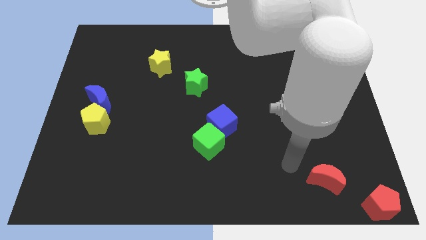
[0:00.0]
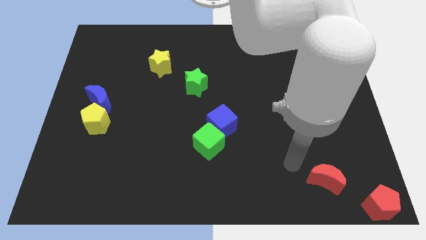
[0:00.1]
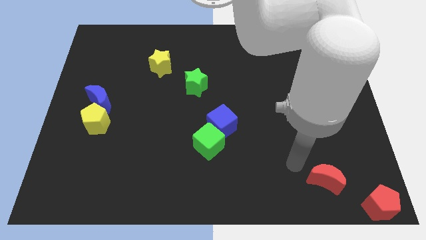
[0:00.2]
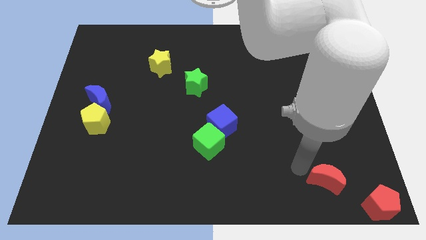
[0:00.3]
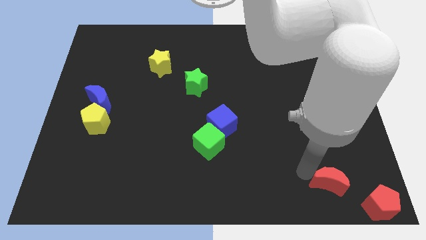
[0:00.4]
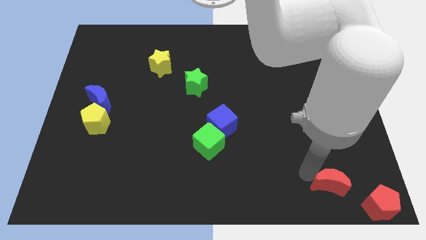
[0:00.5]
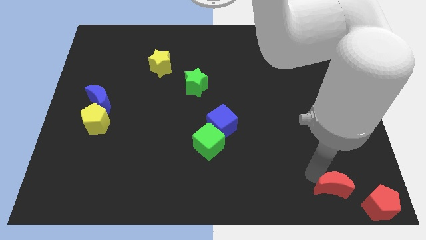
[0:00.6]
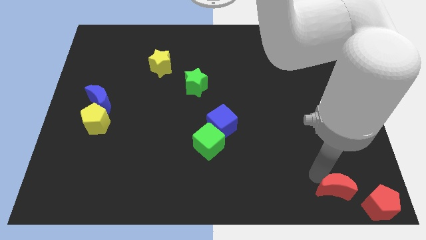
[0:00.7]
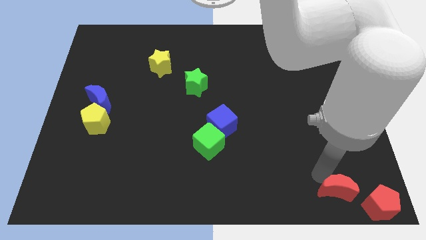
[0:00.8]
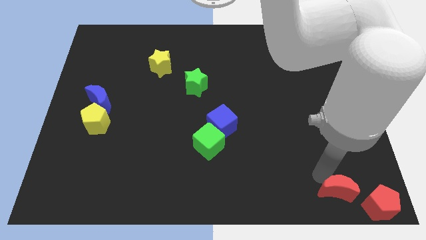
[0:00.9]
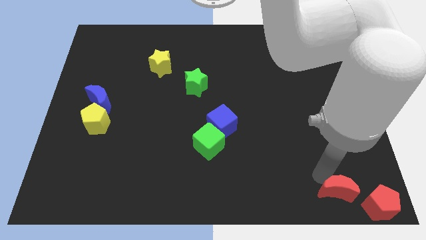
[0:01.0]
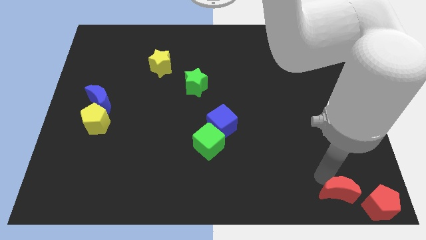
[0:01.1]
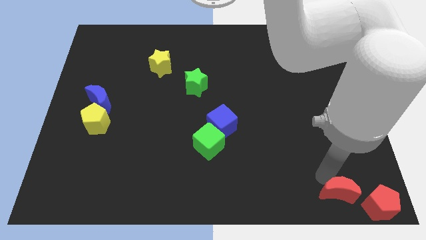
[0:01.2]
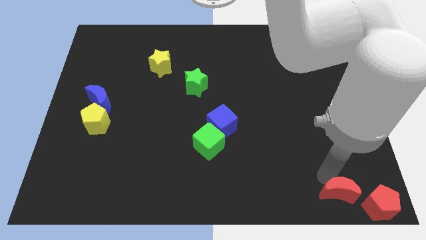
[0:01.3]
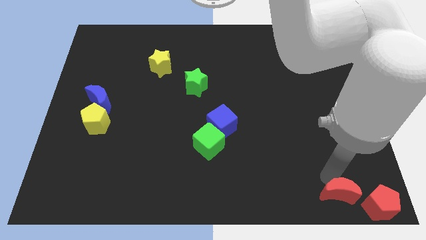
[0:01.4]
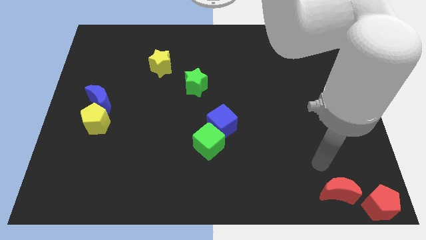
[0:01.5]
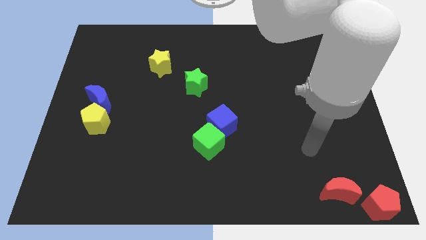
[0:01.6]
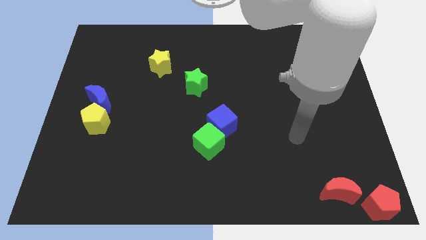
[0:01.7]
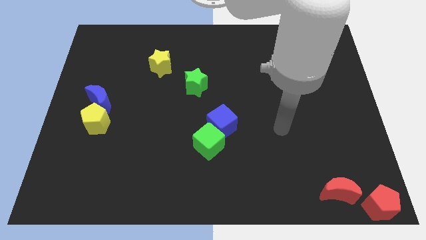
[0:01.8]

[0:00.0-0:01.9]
move the red moon to the top left side of the red pentagon

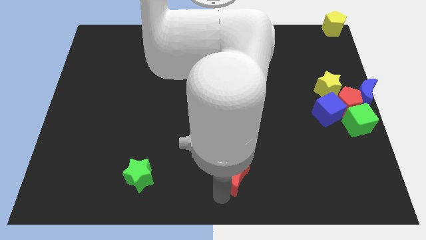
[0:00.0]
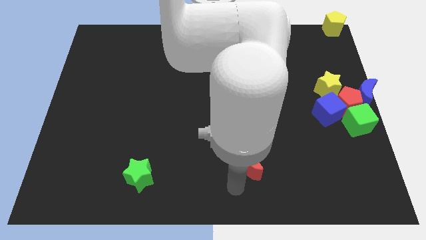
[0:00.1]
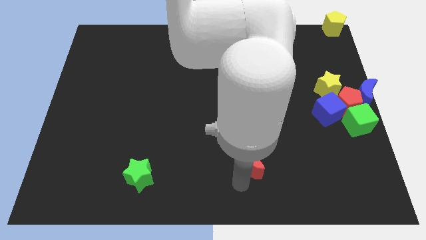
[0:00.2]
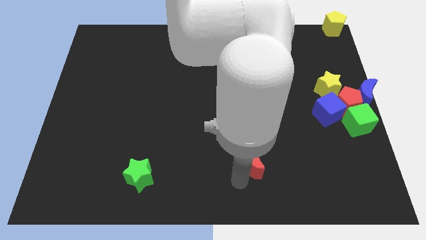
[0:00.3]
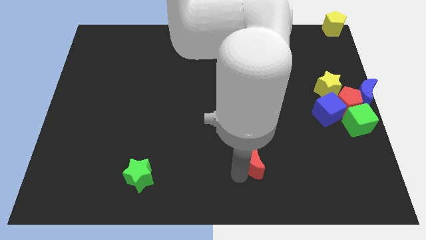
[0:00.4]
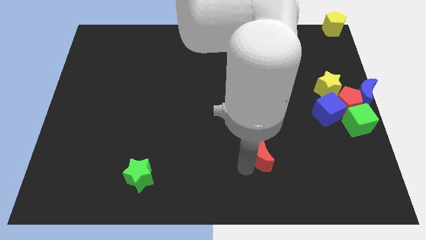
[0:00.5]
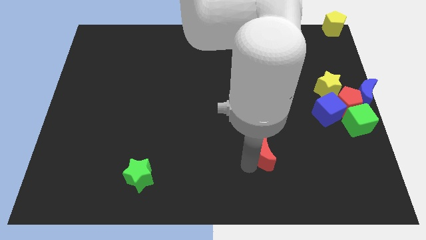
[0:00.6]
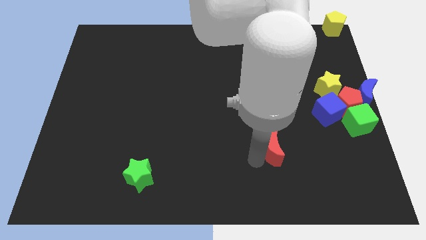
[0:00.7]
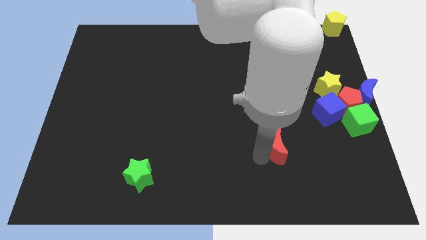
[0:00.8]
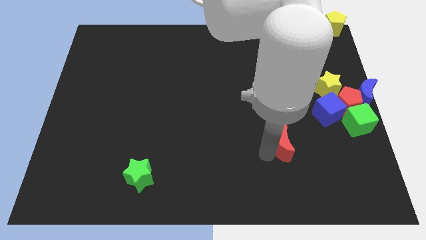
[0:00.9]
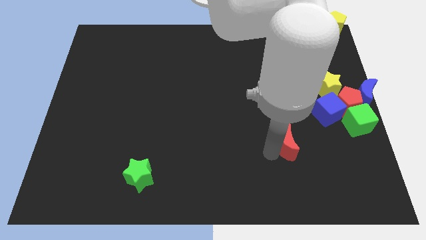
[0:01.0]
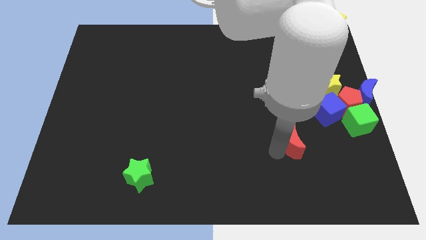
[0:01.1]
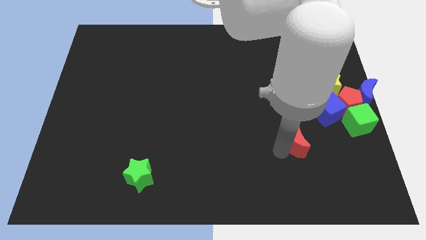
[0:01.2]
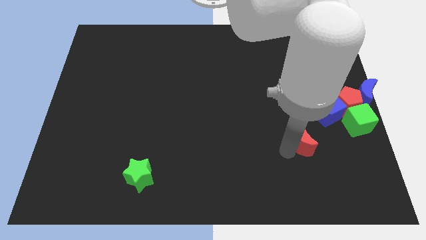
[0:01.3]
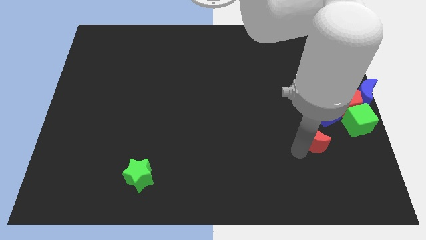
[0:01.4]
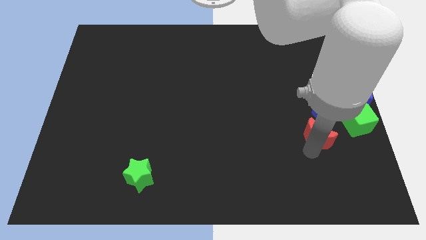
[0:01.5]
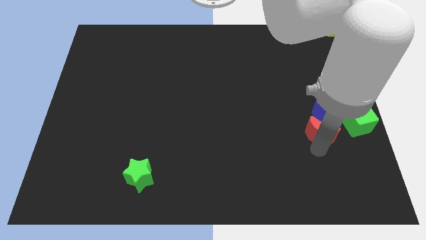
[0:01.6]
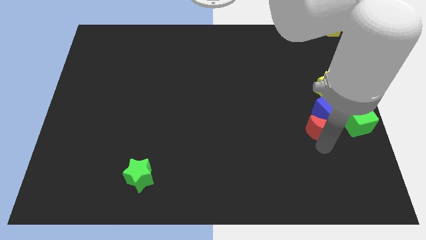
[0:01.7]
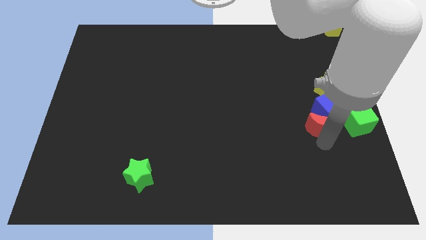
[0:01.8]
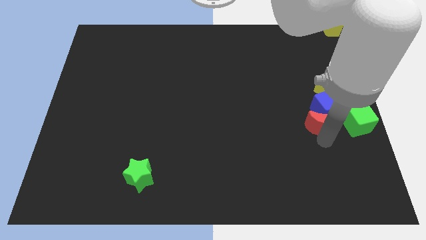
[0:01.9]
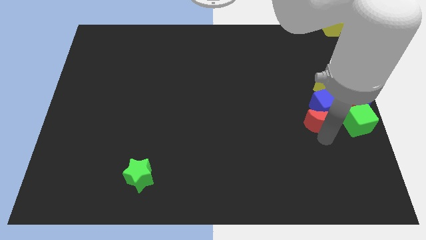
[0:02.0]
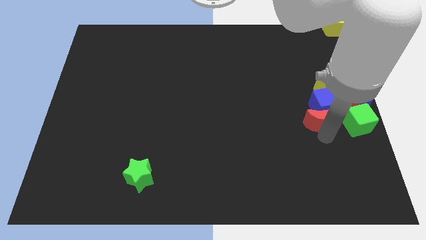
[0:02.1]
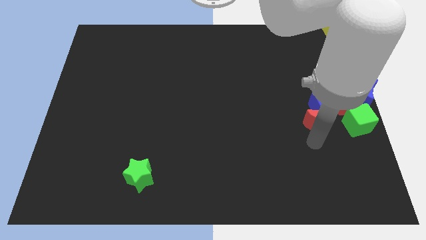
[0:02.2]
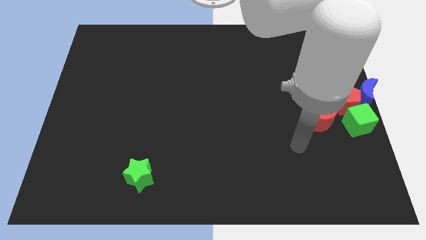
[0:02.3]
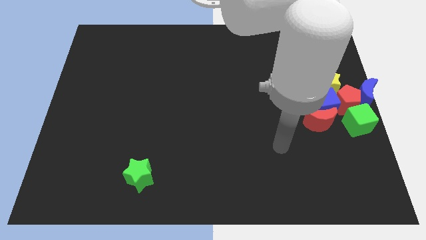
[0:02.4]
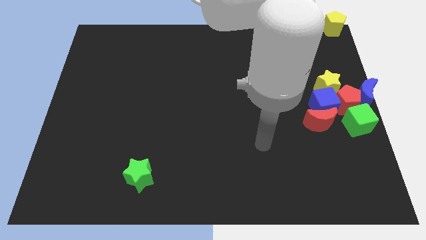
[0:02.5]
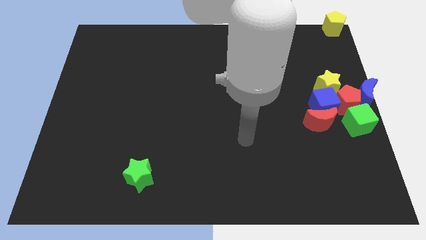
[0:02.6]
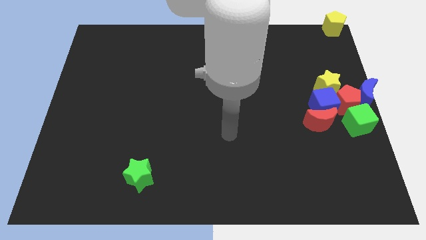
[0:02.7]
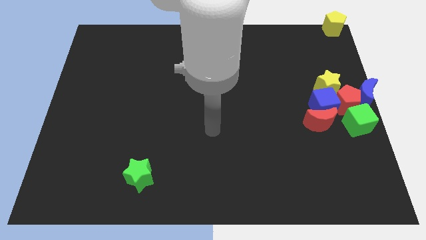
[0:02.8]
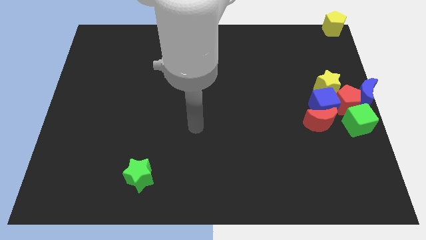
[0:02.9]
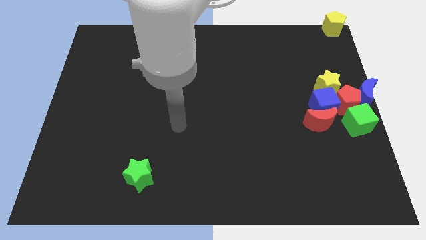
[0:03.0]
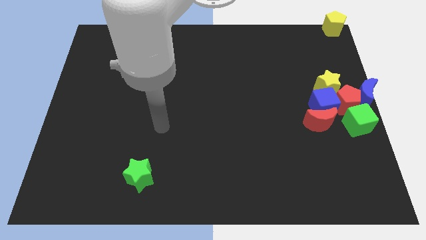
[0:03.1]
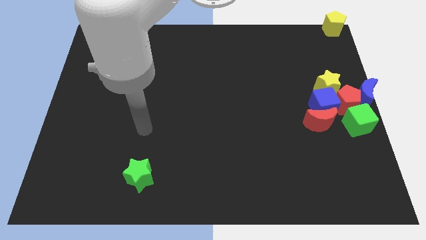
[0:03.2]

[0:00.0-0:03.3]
push the red moon to the bottom of the blue cube

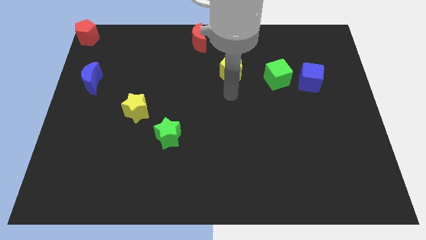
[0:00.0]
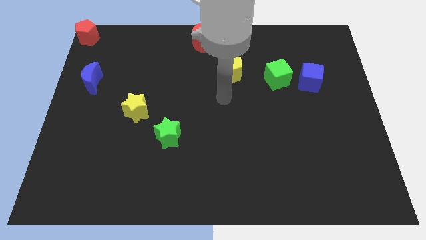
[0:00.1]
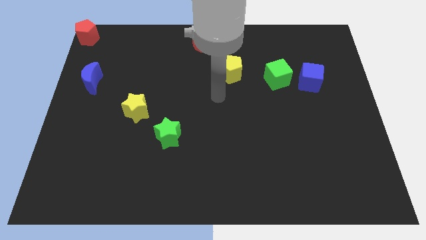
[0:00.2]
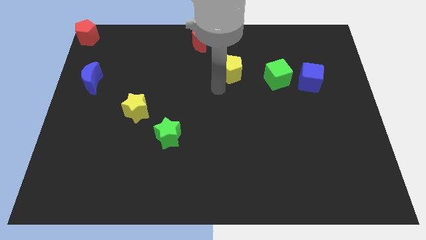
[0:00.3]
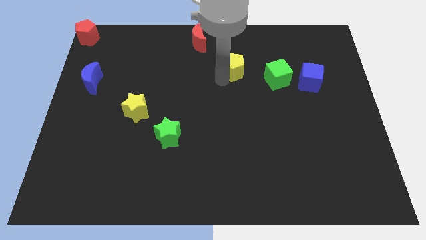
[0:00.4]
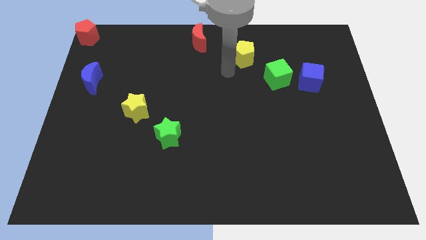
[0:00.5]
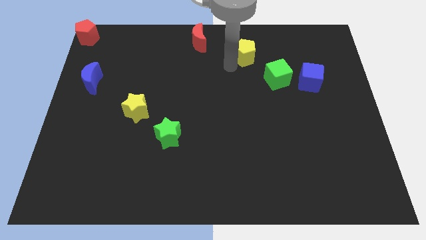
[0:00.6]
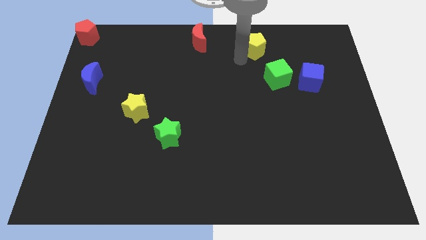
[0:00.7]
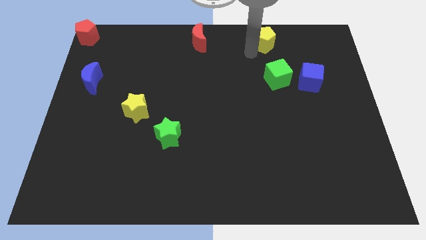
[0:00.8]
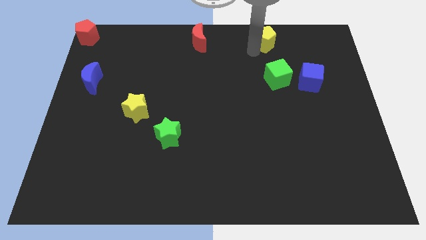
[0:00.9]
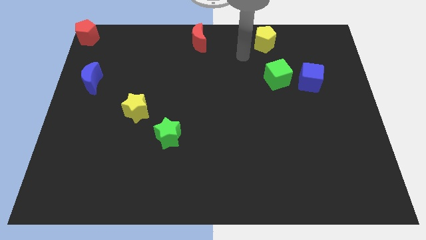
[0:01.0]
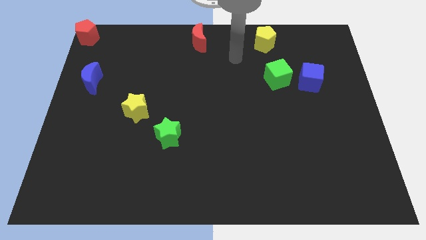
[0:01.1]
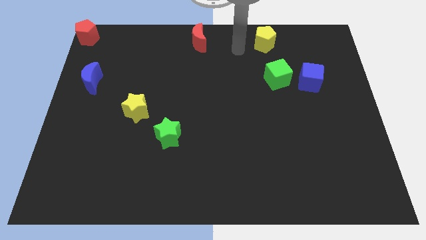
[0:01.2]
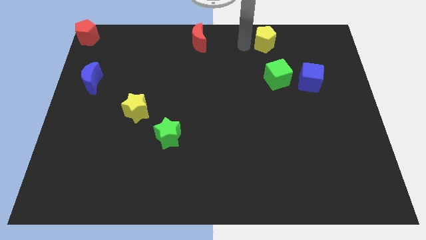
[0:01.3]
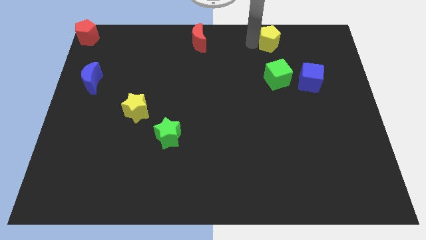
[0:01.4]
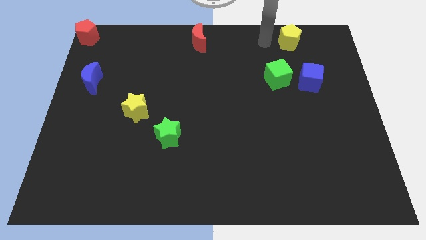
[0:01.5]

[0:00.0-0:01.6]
push the yellow pentagon to the top of the green cube

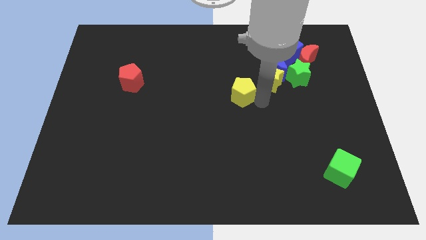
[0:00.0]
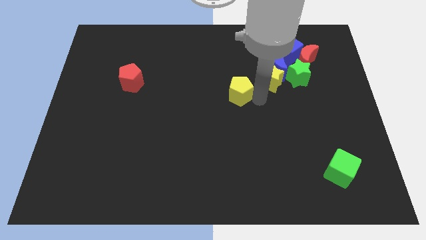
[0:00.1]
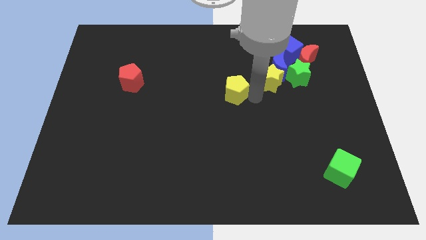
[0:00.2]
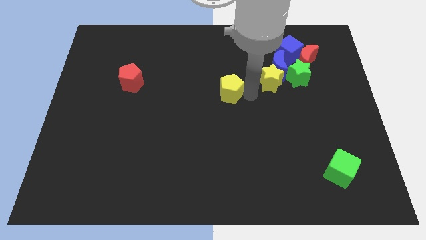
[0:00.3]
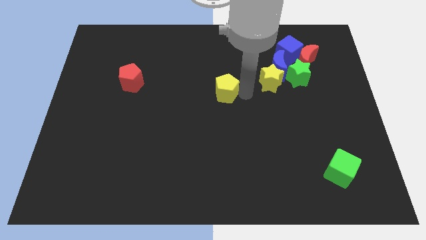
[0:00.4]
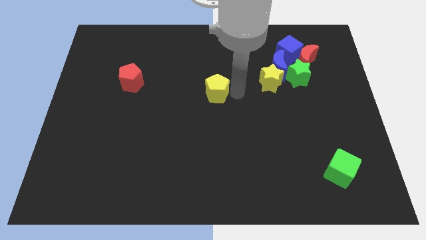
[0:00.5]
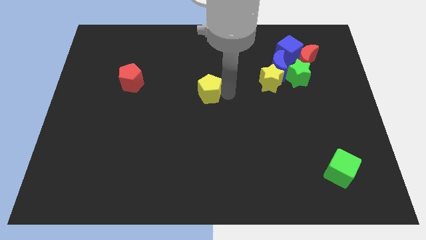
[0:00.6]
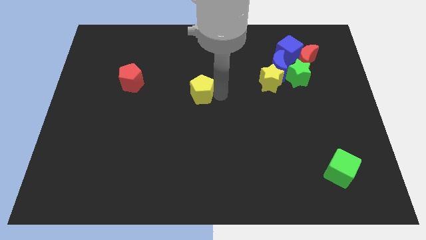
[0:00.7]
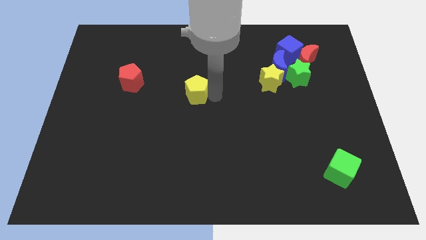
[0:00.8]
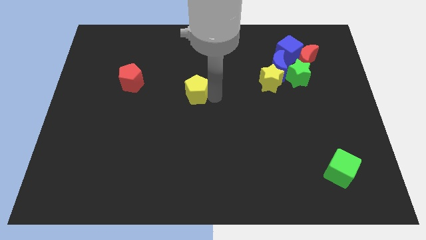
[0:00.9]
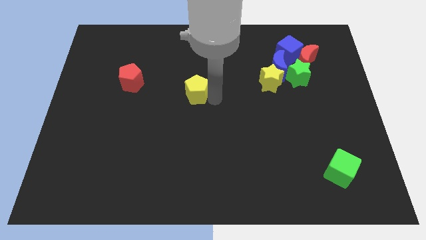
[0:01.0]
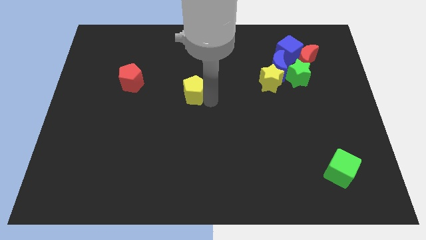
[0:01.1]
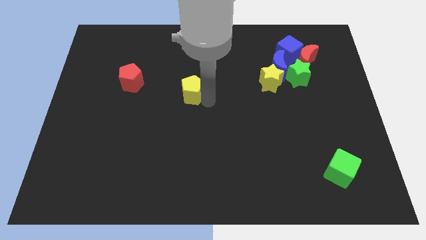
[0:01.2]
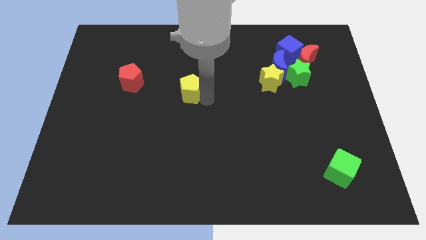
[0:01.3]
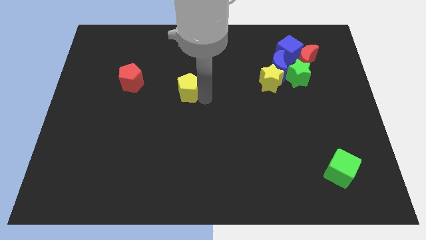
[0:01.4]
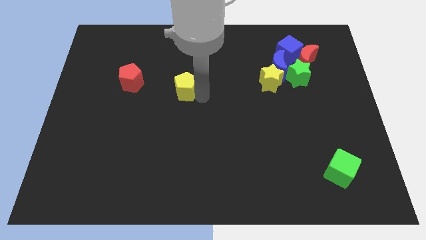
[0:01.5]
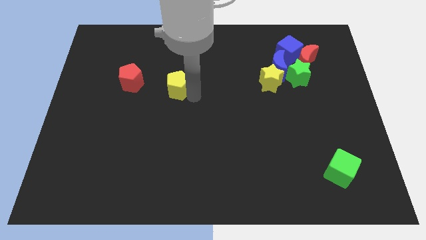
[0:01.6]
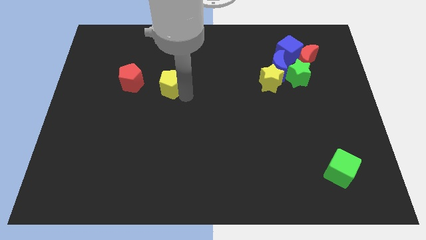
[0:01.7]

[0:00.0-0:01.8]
slide the yellow pentagon towards the red pentagon

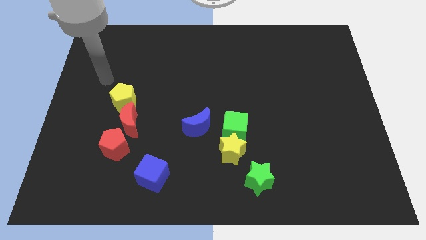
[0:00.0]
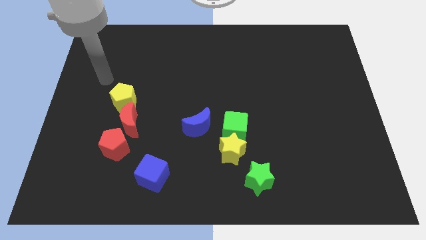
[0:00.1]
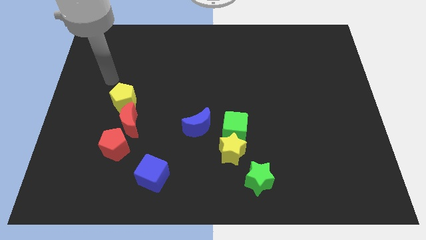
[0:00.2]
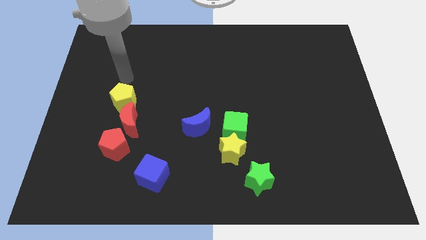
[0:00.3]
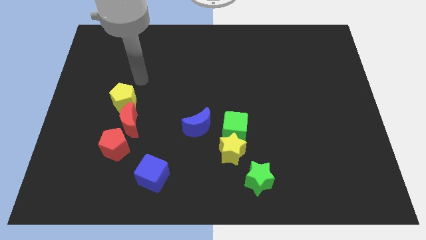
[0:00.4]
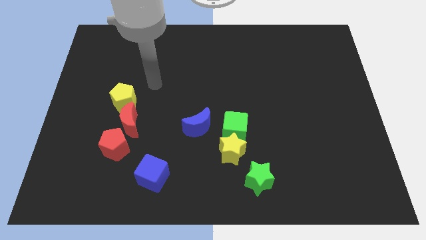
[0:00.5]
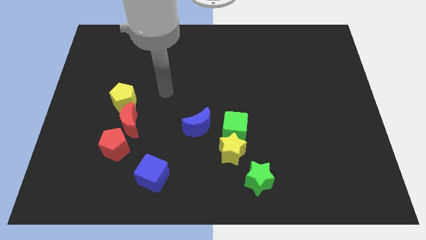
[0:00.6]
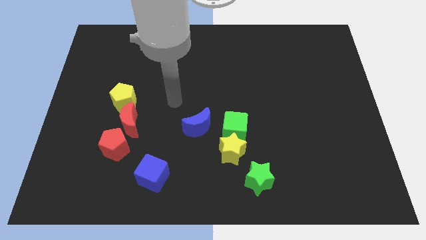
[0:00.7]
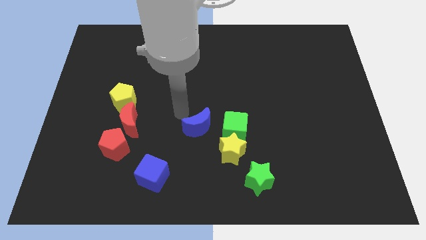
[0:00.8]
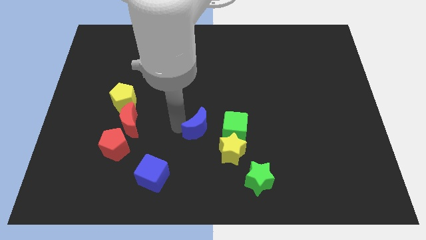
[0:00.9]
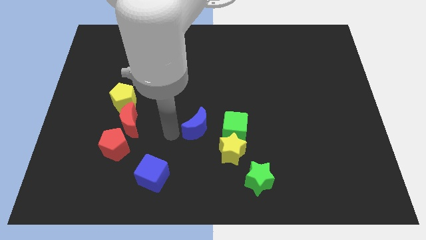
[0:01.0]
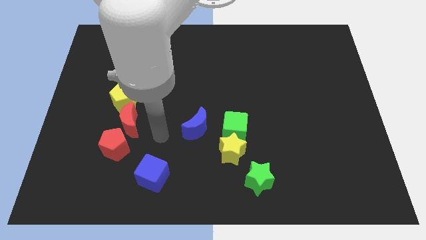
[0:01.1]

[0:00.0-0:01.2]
touch the left side of the blue moon
